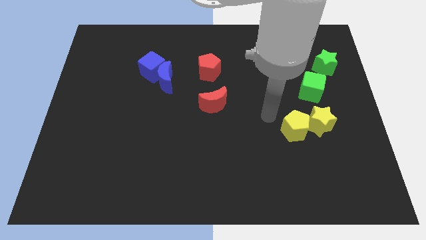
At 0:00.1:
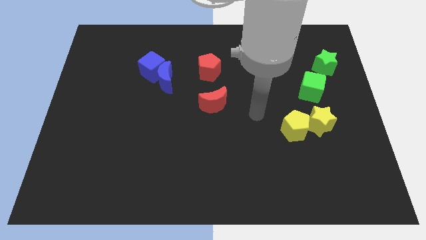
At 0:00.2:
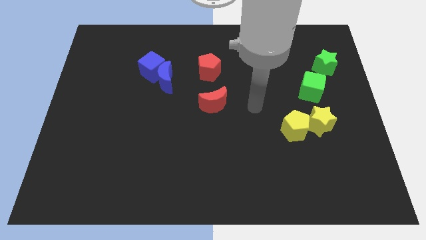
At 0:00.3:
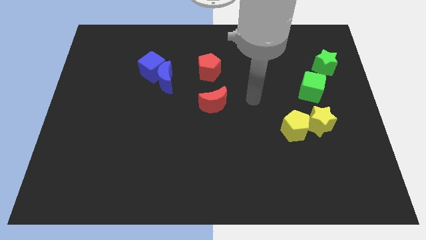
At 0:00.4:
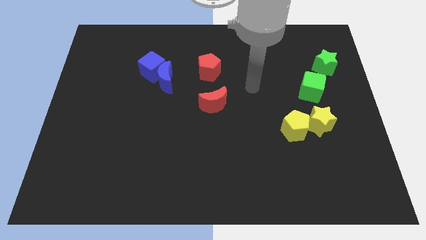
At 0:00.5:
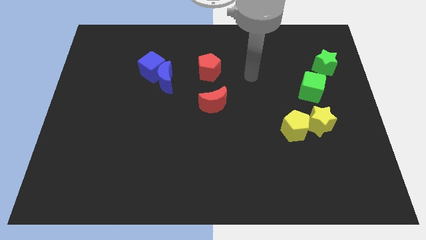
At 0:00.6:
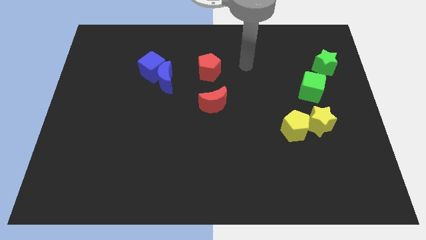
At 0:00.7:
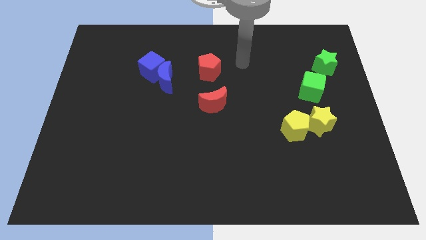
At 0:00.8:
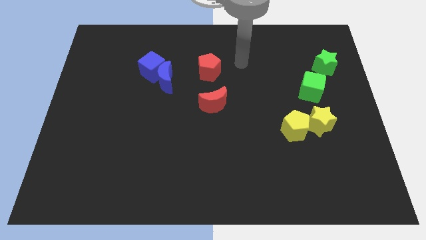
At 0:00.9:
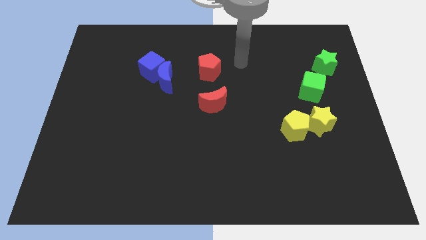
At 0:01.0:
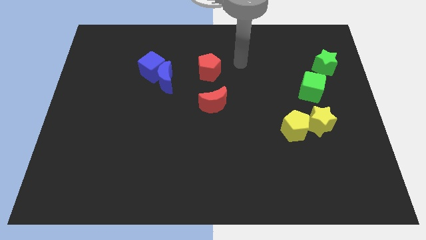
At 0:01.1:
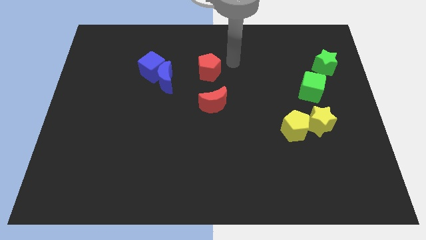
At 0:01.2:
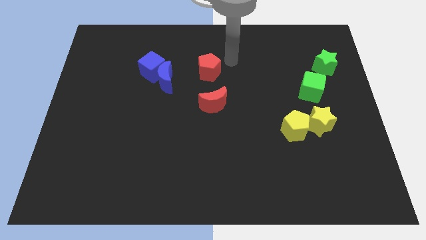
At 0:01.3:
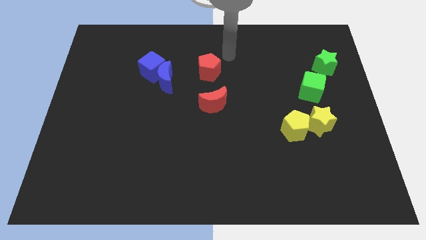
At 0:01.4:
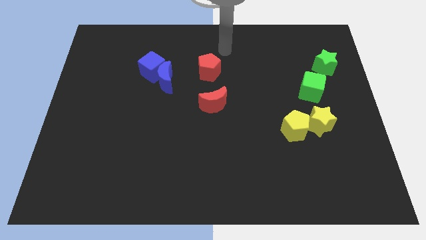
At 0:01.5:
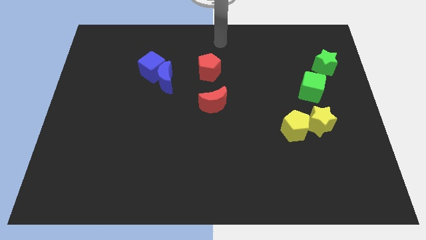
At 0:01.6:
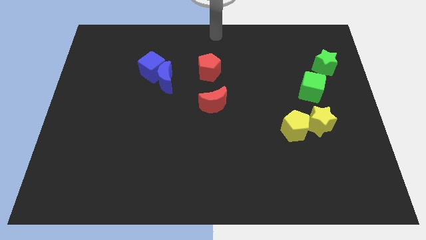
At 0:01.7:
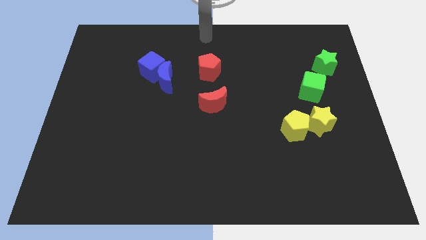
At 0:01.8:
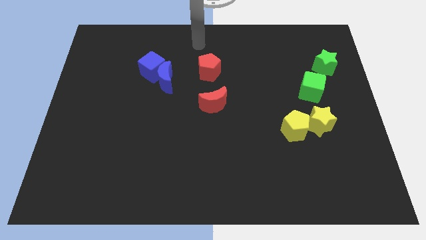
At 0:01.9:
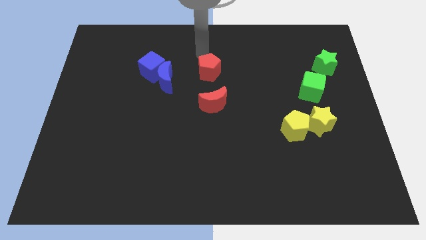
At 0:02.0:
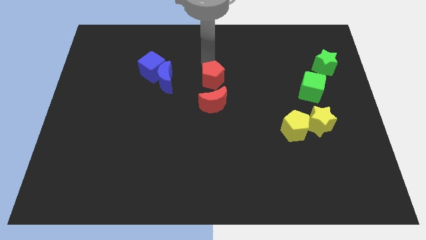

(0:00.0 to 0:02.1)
place the red pentagon to the top side of the red crescent

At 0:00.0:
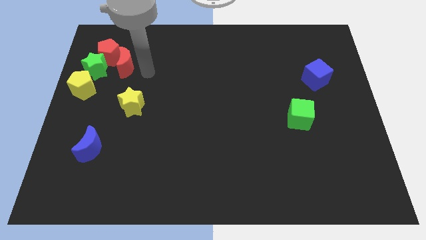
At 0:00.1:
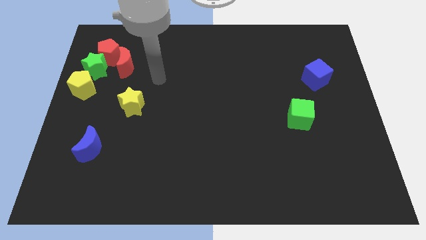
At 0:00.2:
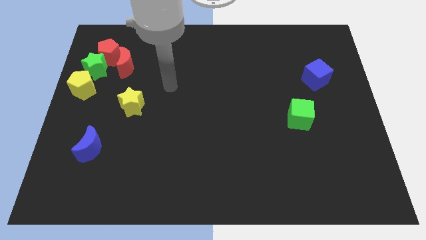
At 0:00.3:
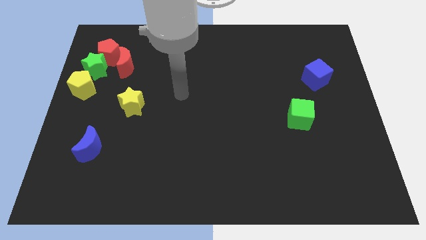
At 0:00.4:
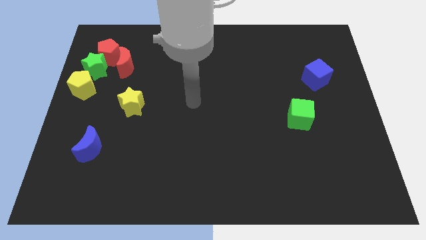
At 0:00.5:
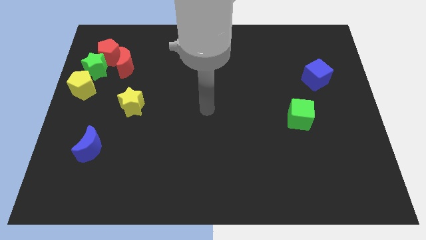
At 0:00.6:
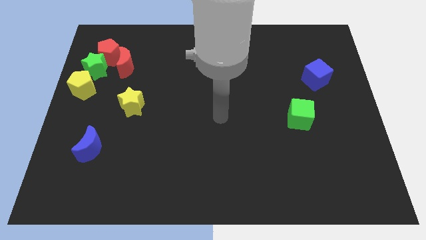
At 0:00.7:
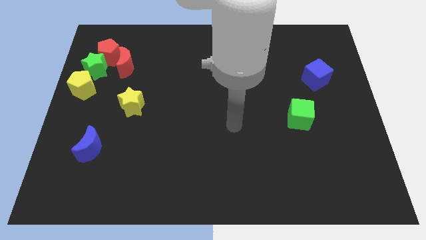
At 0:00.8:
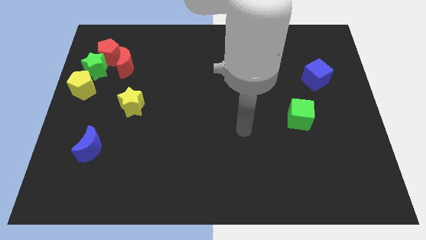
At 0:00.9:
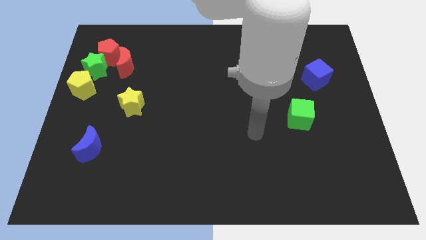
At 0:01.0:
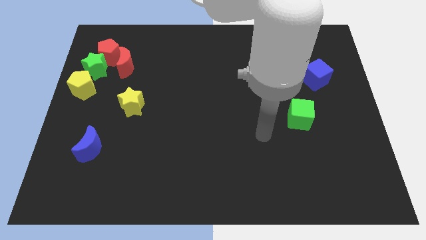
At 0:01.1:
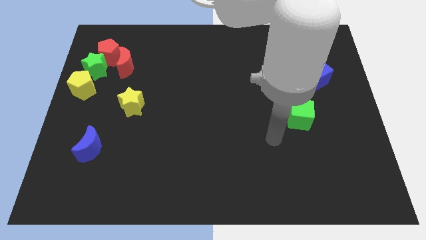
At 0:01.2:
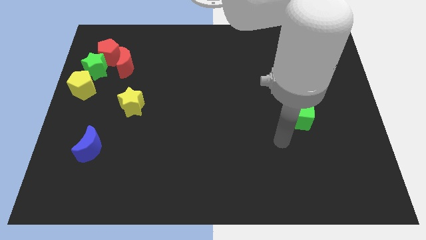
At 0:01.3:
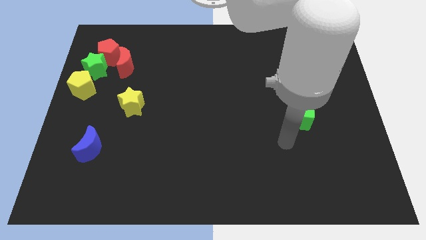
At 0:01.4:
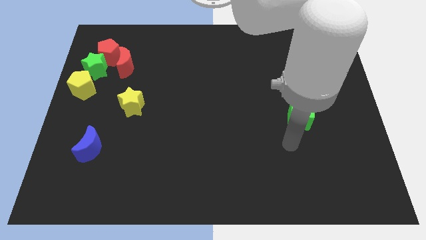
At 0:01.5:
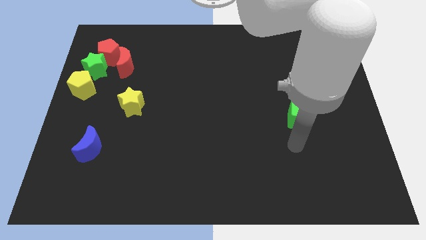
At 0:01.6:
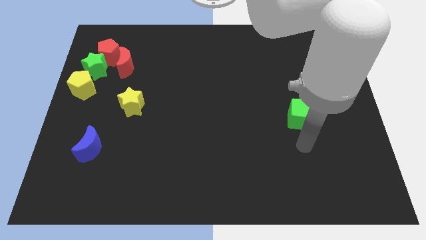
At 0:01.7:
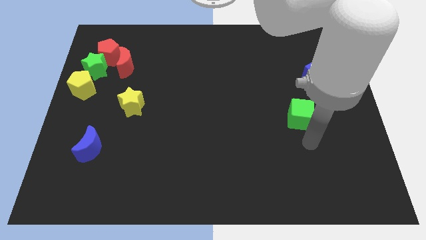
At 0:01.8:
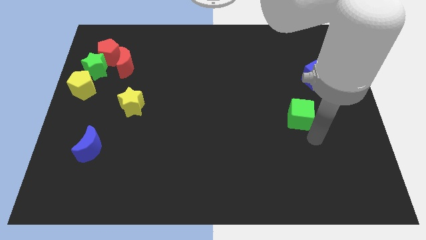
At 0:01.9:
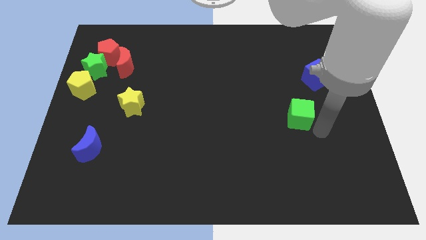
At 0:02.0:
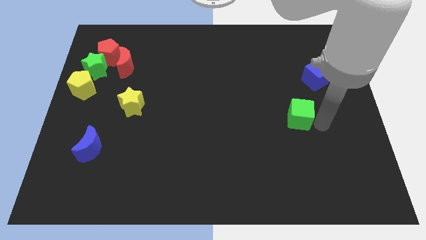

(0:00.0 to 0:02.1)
go to the right side of the green cube

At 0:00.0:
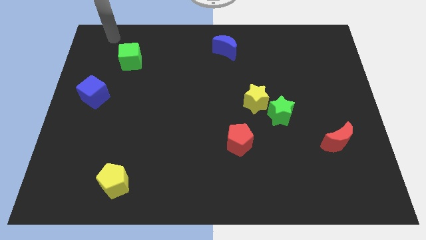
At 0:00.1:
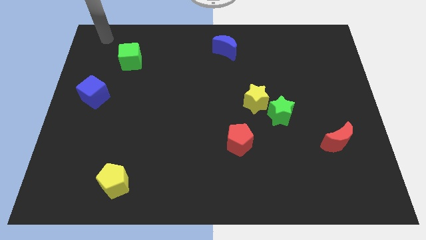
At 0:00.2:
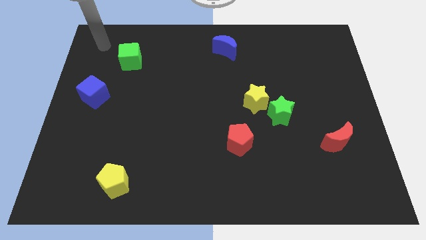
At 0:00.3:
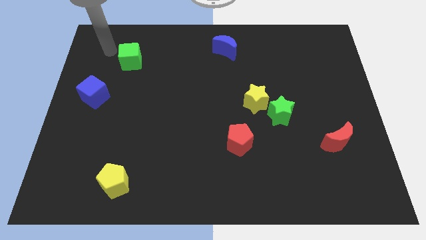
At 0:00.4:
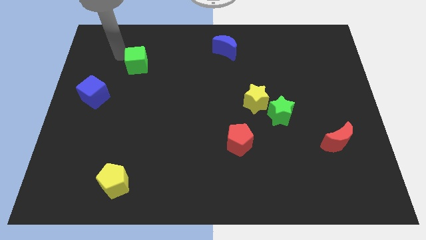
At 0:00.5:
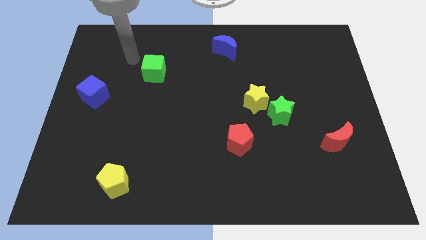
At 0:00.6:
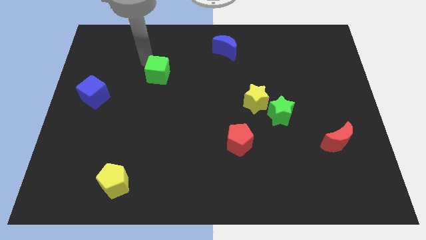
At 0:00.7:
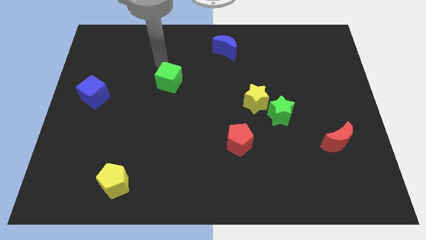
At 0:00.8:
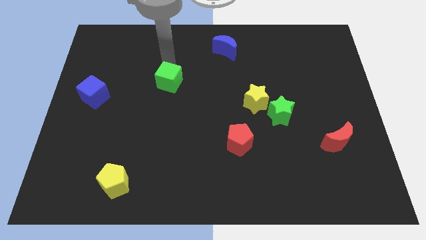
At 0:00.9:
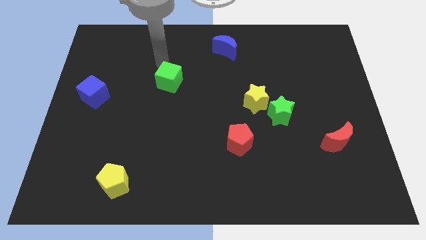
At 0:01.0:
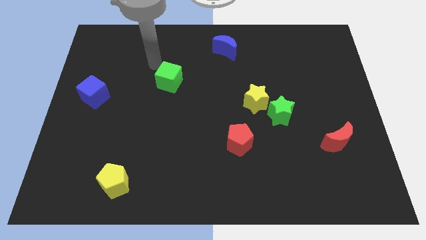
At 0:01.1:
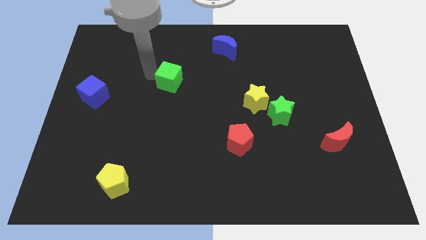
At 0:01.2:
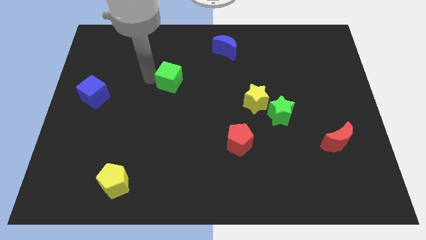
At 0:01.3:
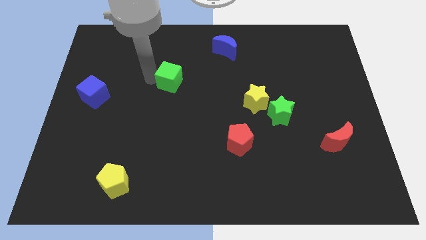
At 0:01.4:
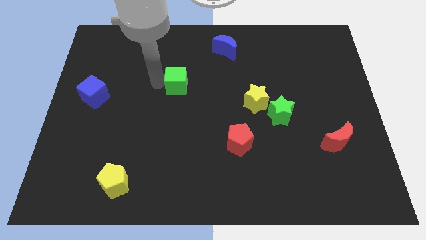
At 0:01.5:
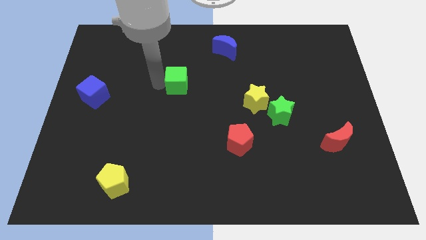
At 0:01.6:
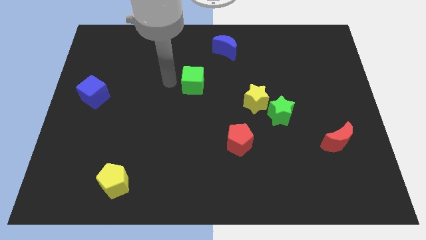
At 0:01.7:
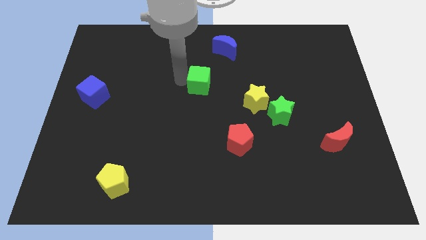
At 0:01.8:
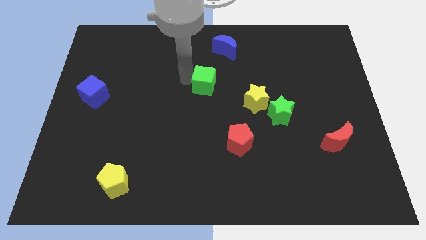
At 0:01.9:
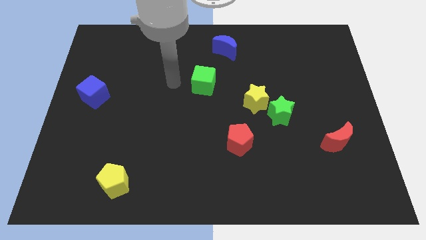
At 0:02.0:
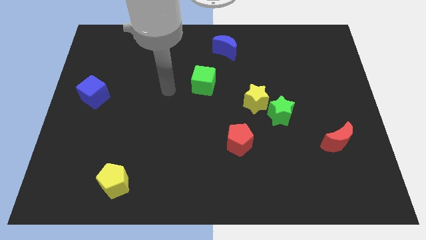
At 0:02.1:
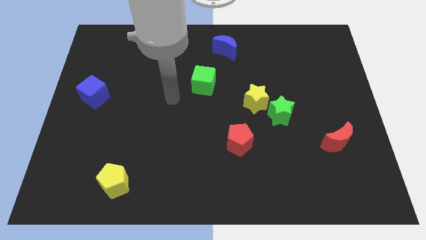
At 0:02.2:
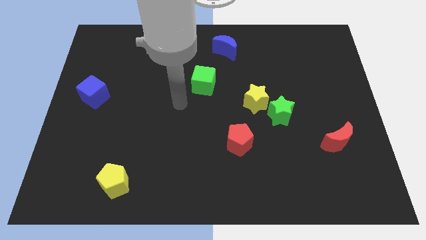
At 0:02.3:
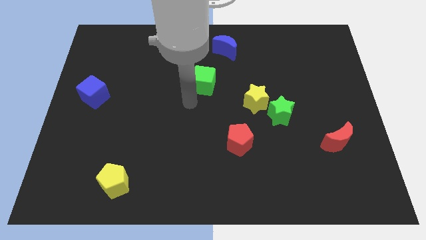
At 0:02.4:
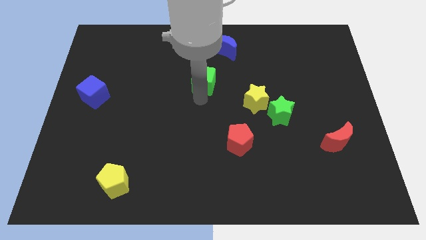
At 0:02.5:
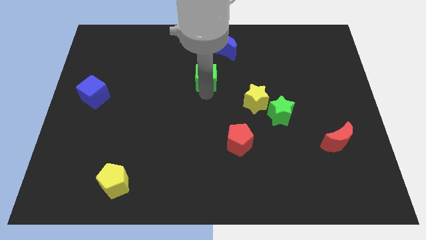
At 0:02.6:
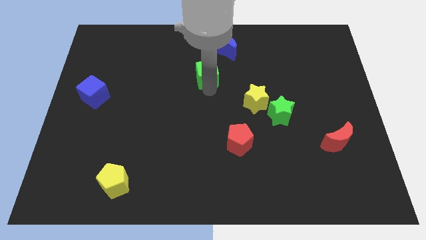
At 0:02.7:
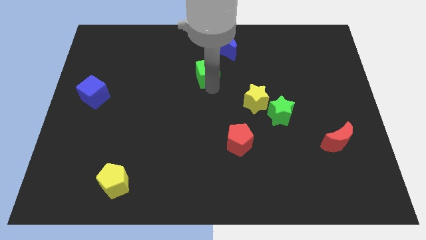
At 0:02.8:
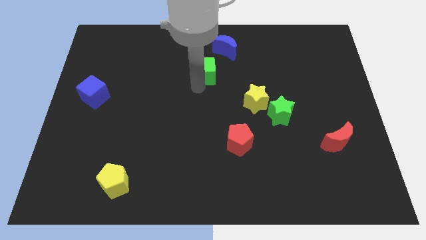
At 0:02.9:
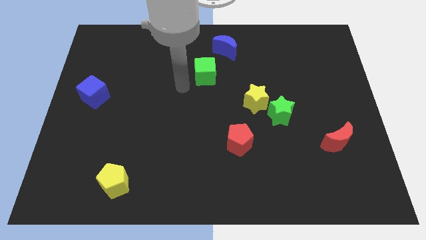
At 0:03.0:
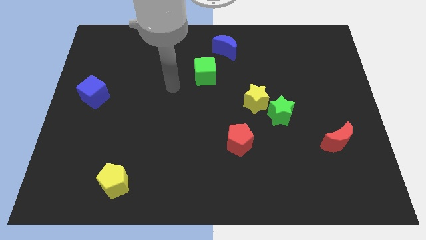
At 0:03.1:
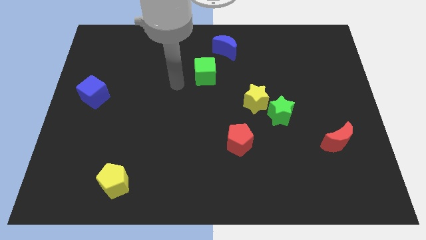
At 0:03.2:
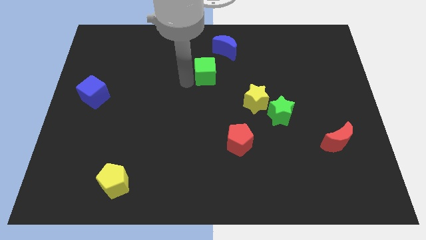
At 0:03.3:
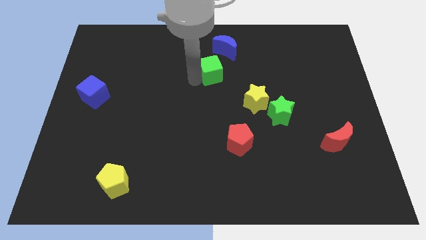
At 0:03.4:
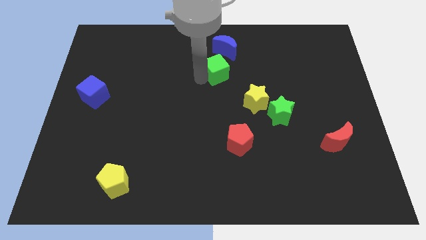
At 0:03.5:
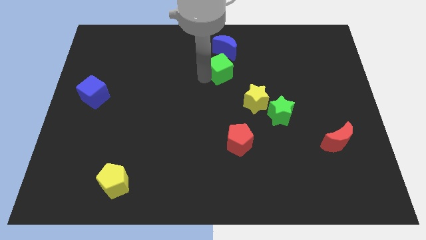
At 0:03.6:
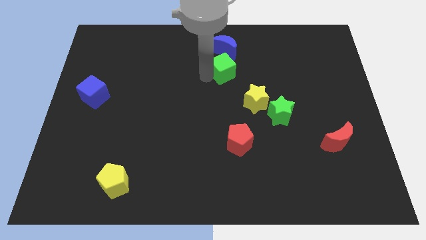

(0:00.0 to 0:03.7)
drag green cube near blue moon

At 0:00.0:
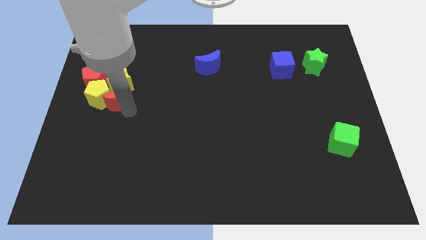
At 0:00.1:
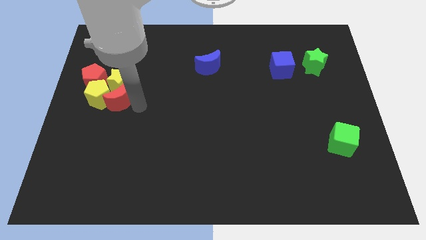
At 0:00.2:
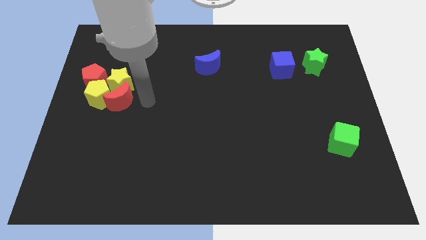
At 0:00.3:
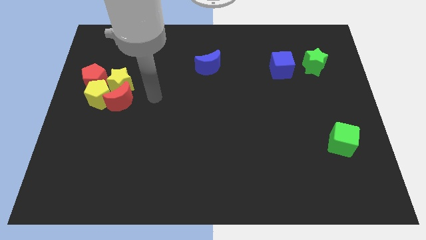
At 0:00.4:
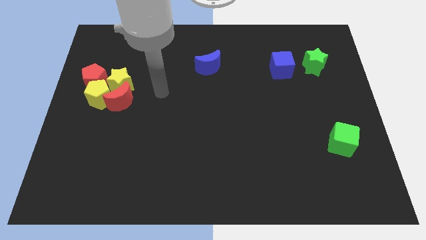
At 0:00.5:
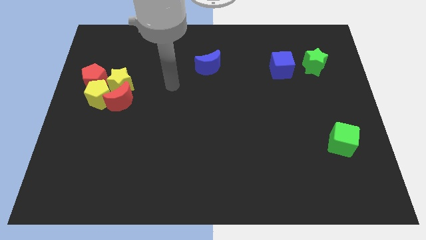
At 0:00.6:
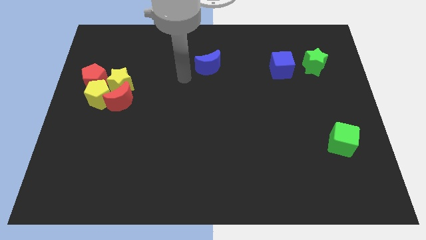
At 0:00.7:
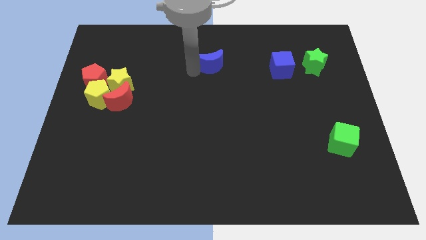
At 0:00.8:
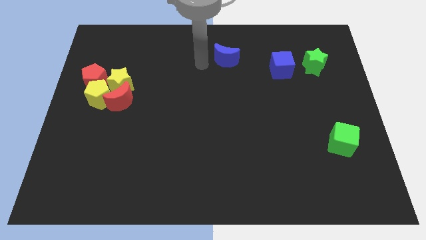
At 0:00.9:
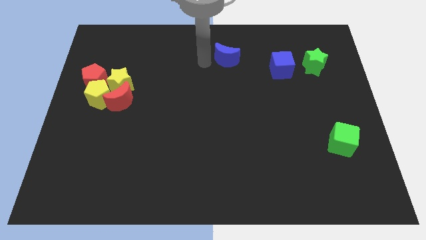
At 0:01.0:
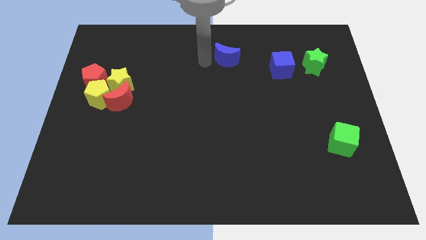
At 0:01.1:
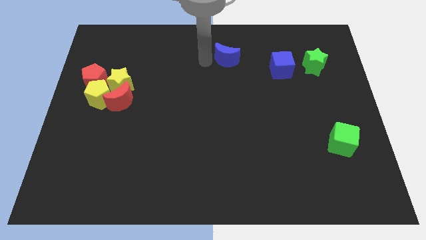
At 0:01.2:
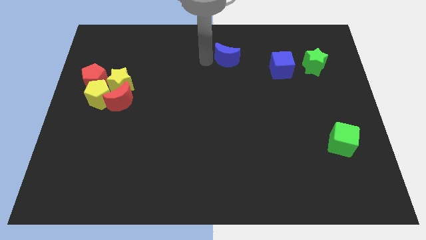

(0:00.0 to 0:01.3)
move the arm into the blue moon
